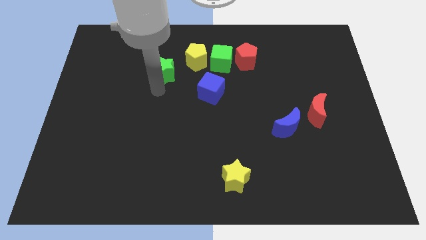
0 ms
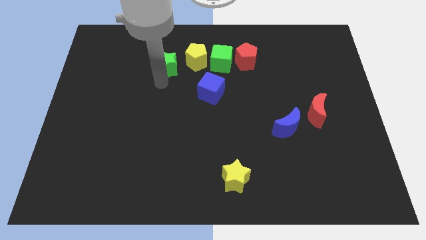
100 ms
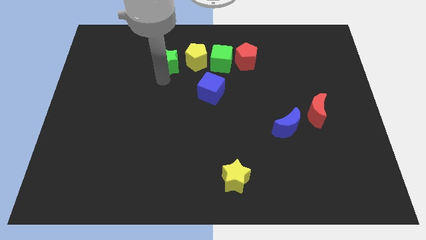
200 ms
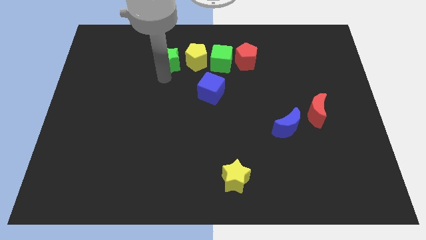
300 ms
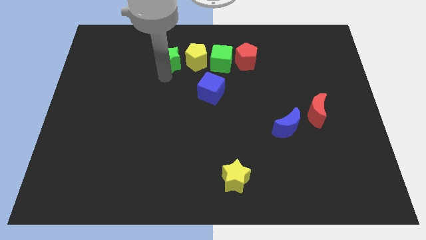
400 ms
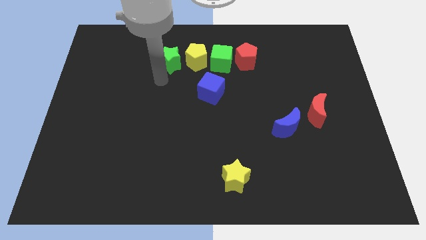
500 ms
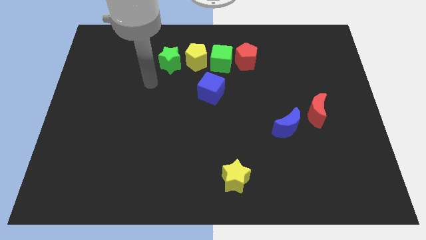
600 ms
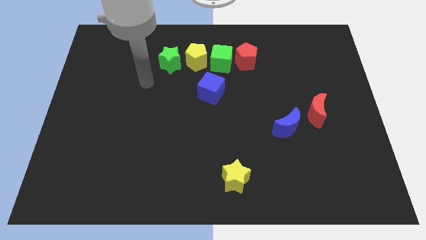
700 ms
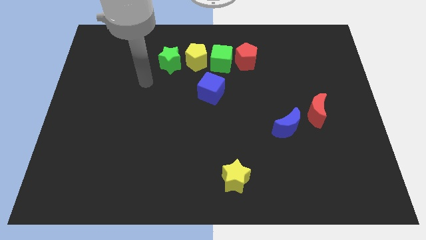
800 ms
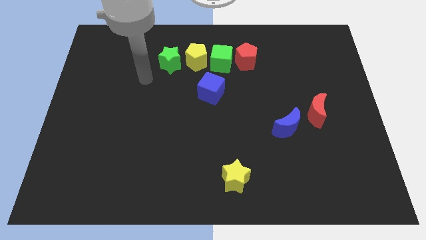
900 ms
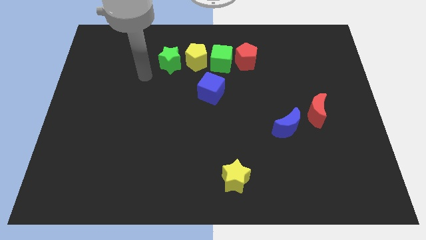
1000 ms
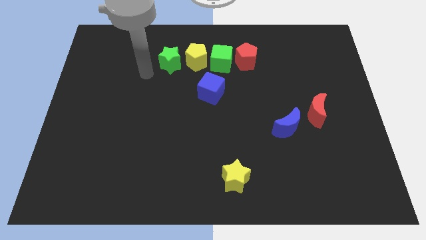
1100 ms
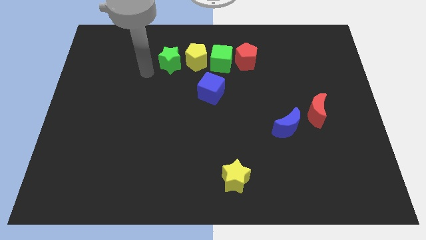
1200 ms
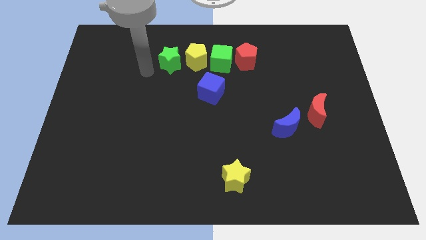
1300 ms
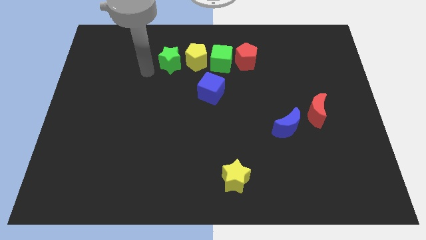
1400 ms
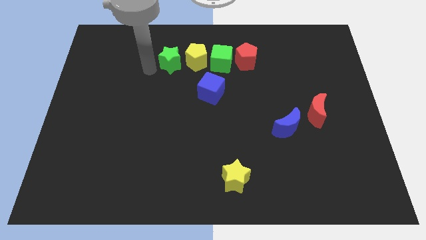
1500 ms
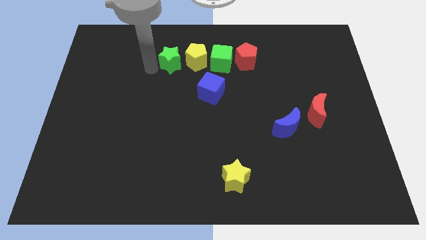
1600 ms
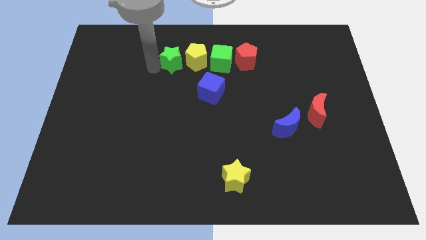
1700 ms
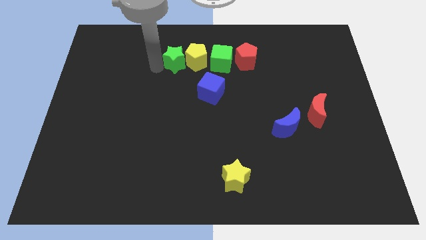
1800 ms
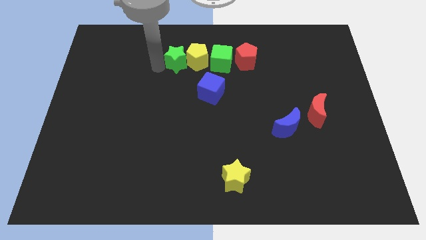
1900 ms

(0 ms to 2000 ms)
place green star to the left of yellow pentagon

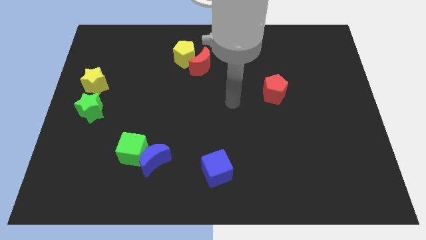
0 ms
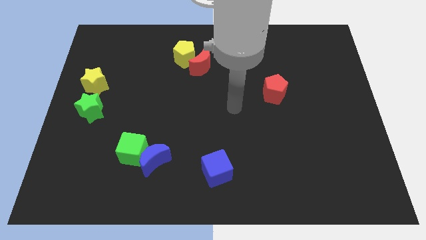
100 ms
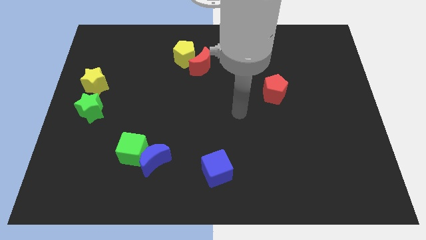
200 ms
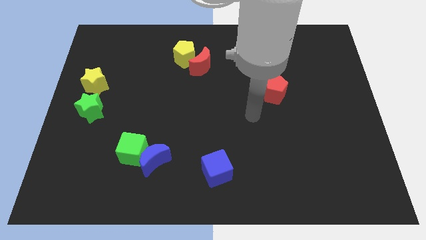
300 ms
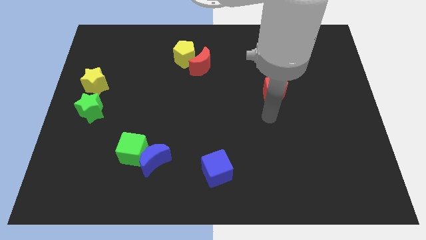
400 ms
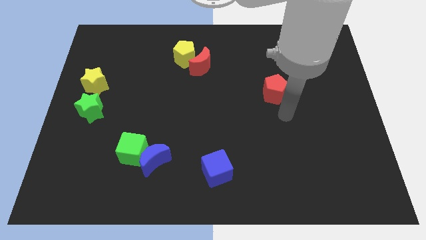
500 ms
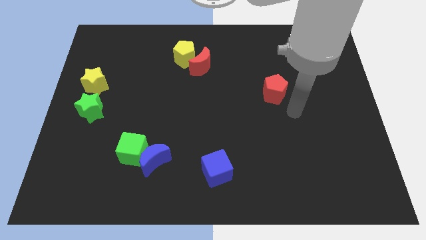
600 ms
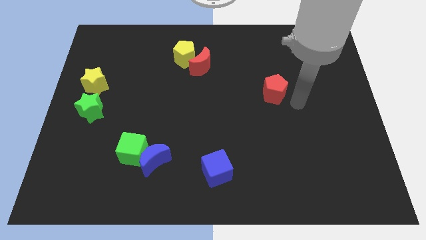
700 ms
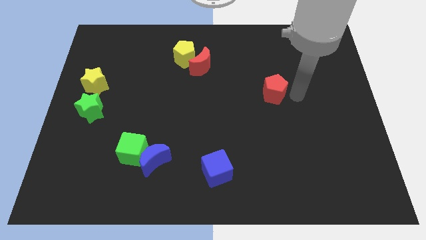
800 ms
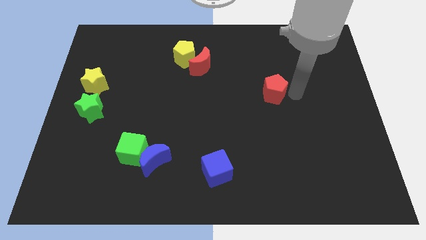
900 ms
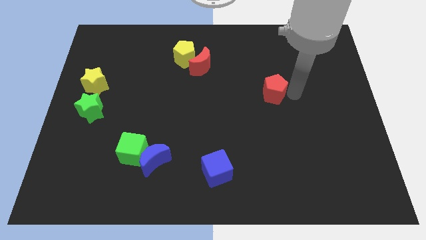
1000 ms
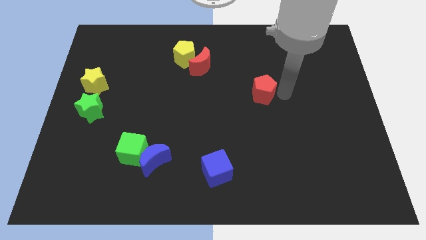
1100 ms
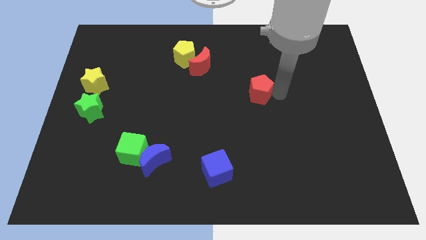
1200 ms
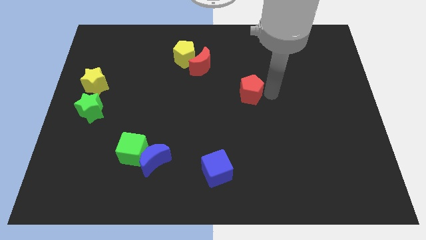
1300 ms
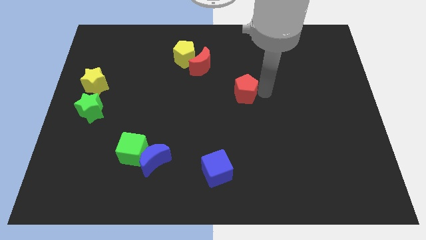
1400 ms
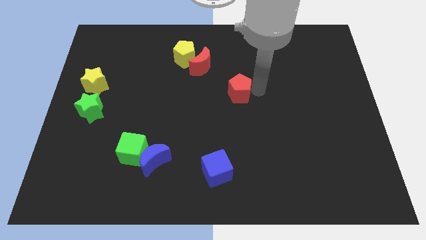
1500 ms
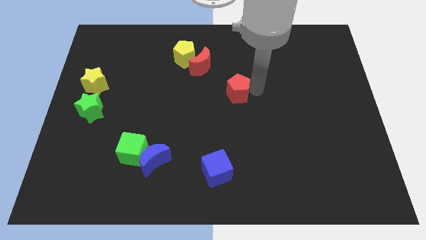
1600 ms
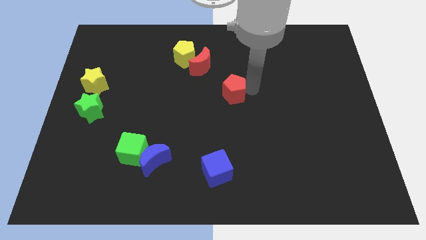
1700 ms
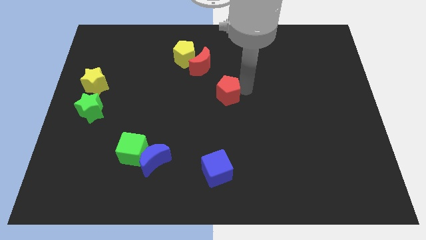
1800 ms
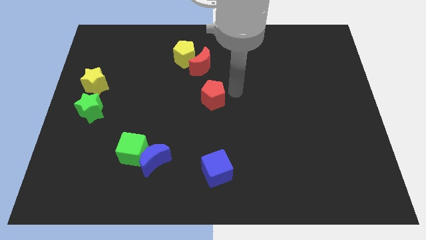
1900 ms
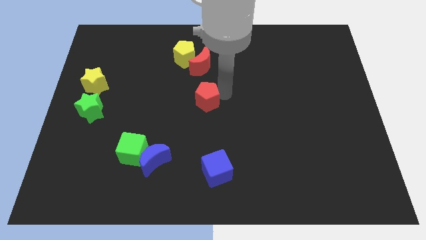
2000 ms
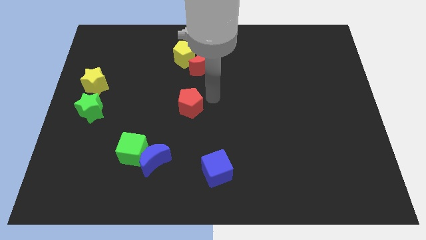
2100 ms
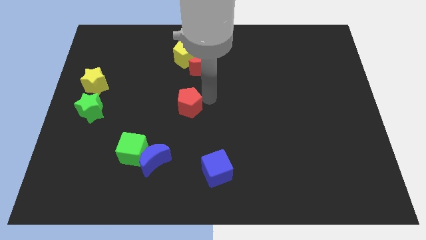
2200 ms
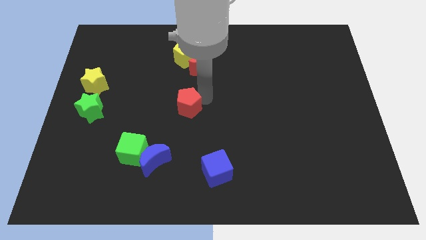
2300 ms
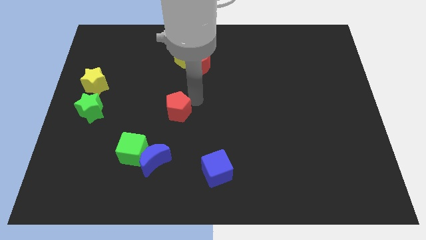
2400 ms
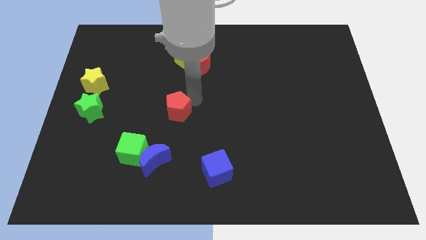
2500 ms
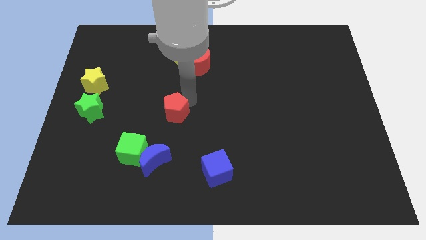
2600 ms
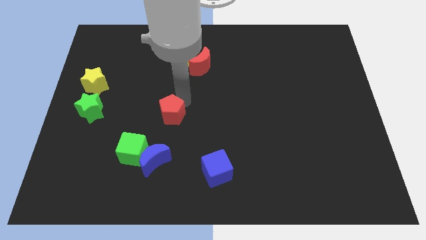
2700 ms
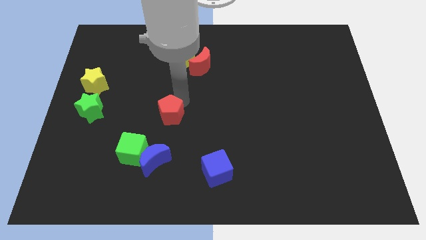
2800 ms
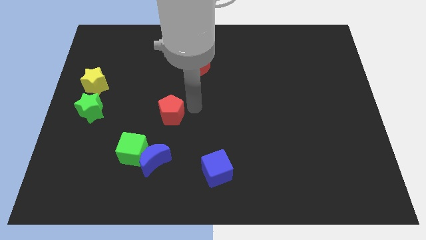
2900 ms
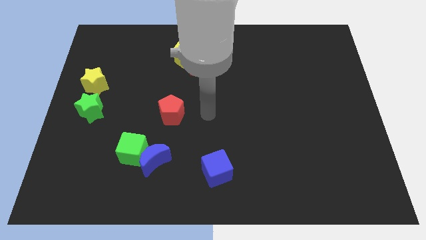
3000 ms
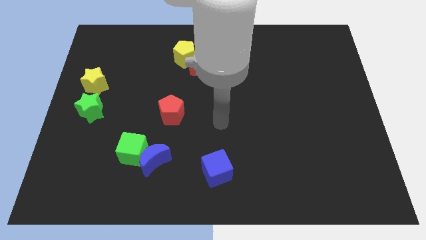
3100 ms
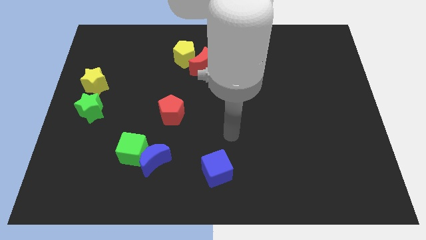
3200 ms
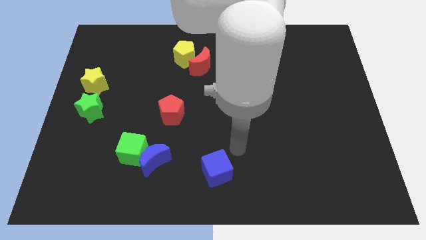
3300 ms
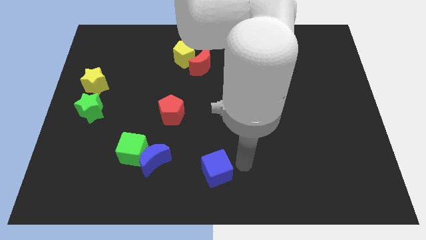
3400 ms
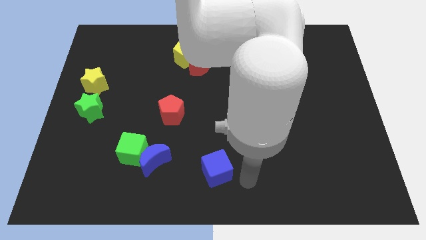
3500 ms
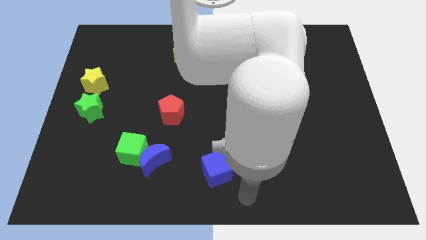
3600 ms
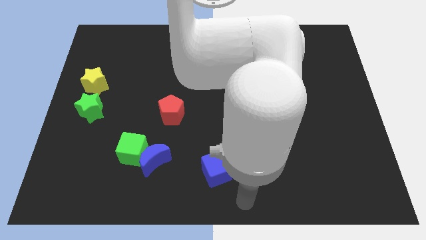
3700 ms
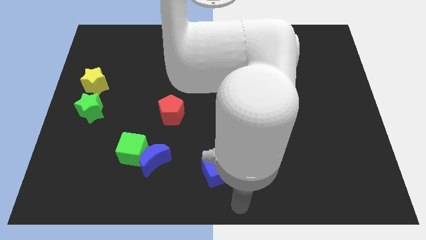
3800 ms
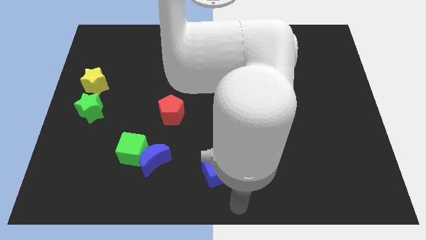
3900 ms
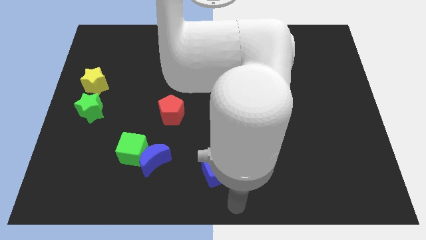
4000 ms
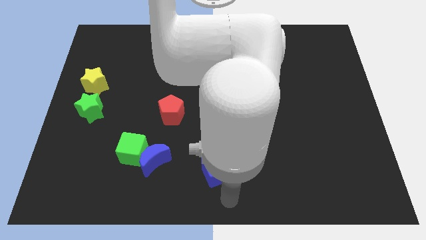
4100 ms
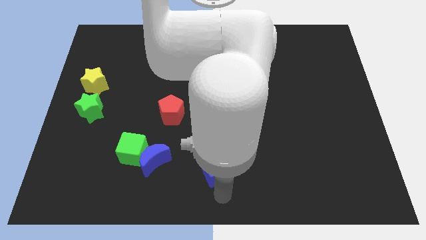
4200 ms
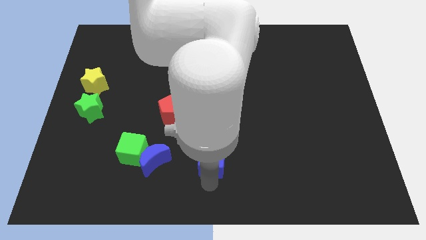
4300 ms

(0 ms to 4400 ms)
move the red pentagon above the blue moon

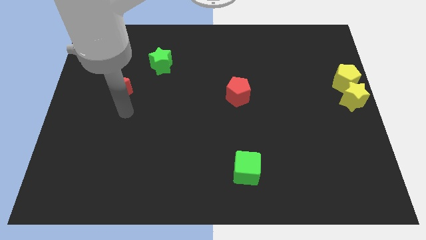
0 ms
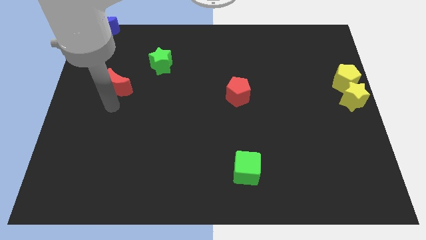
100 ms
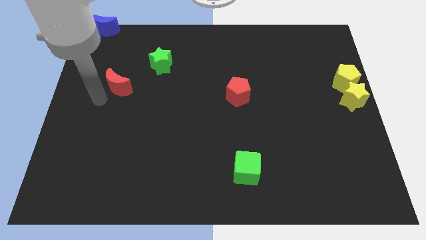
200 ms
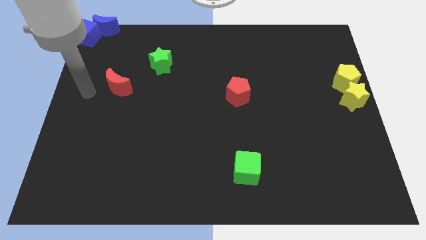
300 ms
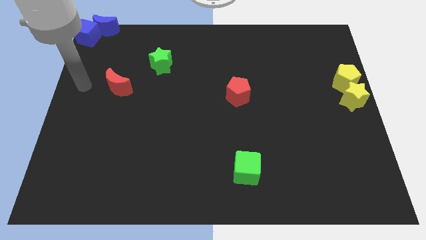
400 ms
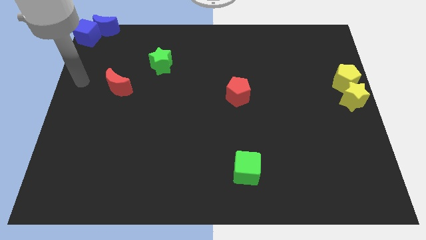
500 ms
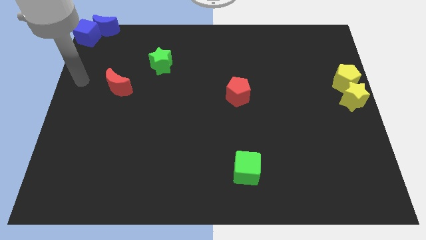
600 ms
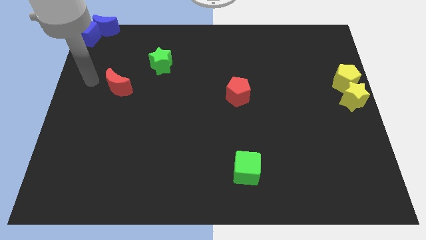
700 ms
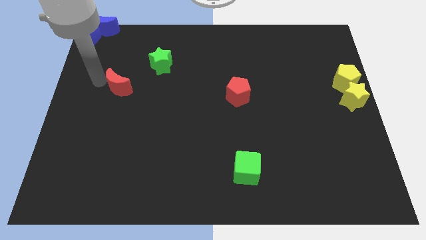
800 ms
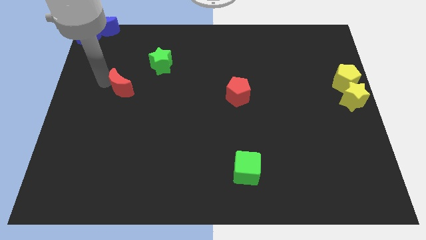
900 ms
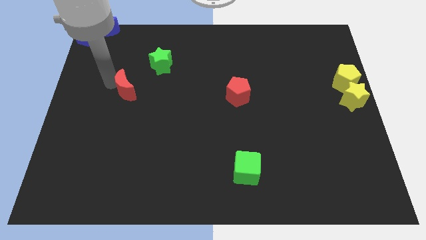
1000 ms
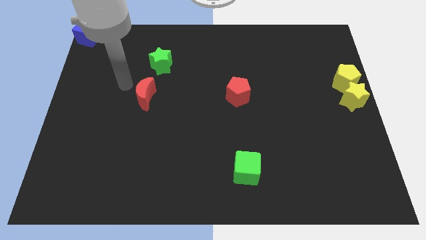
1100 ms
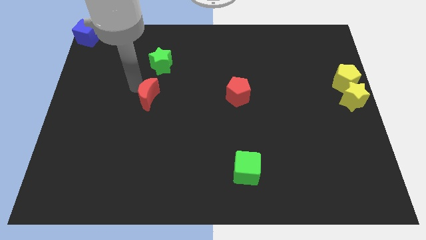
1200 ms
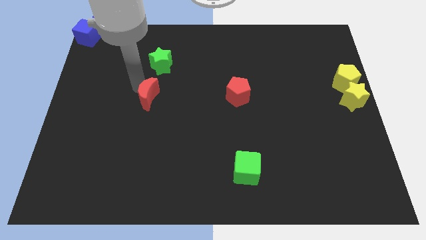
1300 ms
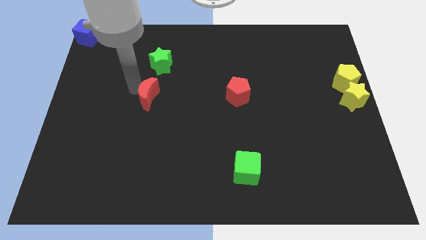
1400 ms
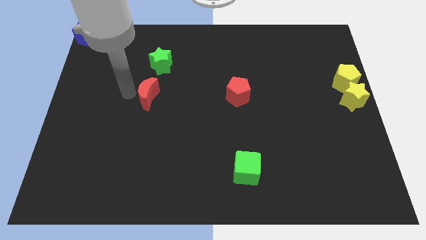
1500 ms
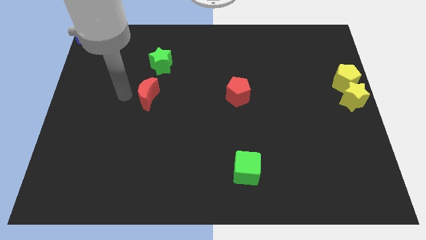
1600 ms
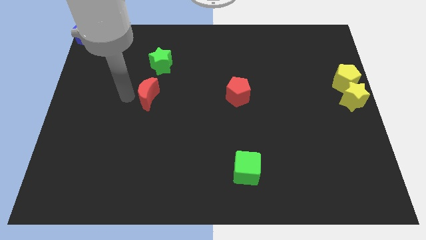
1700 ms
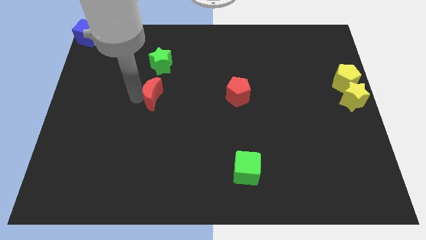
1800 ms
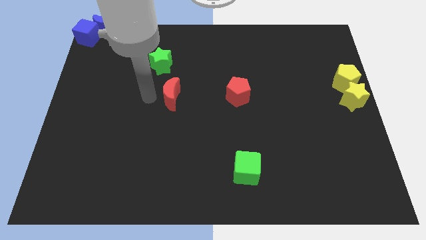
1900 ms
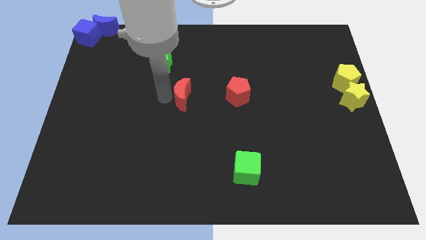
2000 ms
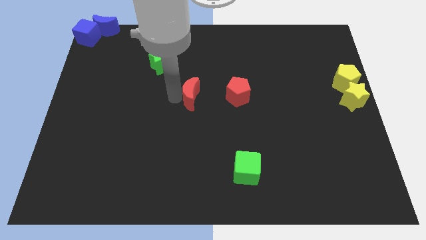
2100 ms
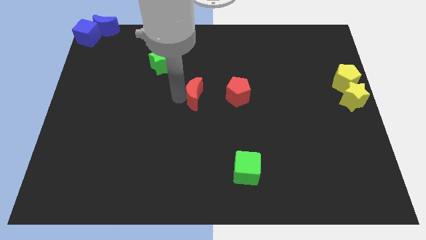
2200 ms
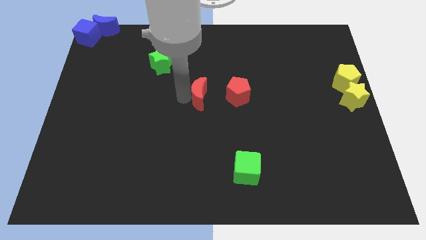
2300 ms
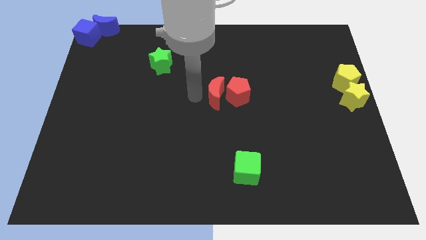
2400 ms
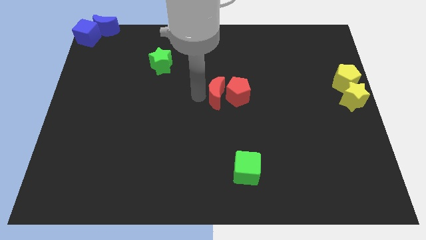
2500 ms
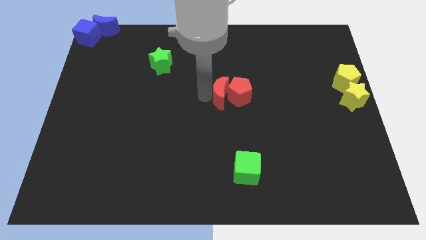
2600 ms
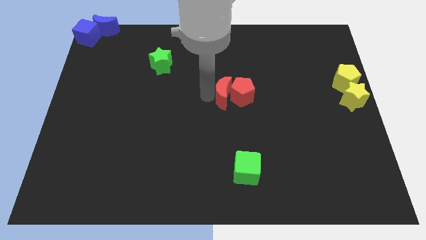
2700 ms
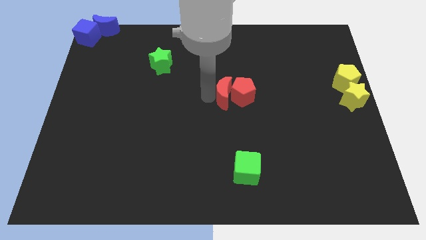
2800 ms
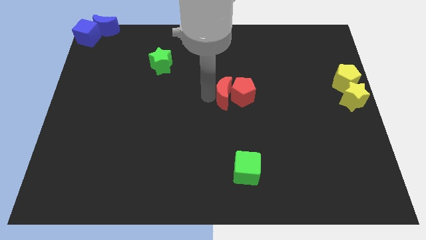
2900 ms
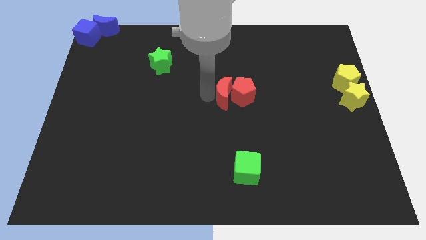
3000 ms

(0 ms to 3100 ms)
move the red crescent into the red pentagon
